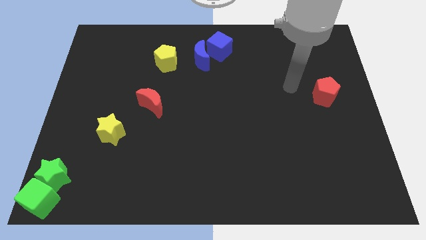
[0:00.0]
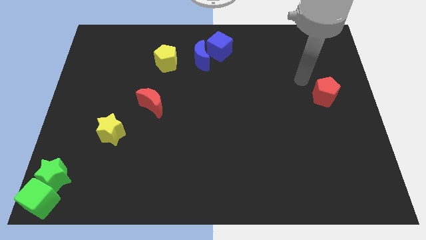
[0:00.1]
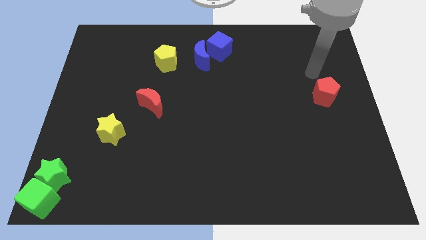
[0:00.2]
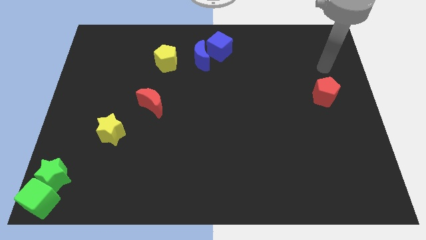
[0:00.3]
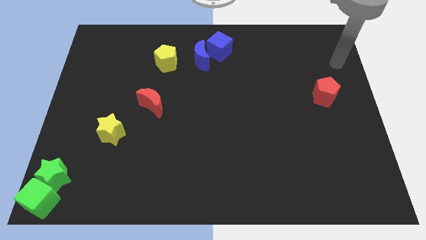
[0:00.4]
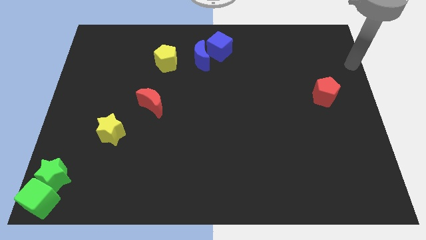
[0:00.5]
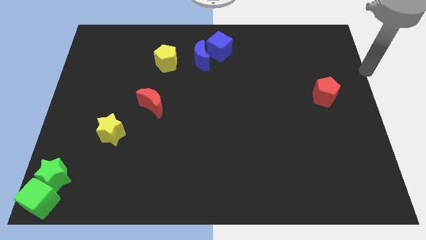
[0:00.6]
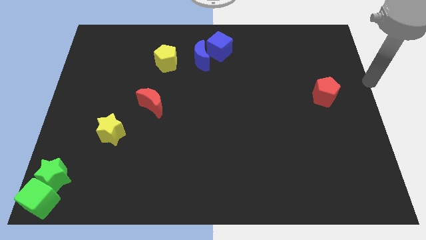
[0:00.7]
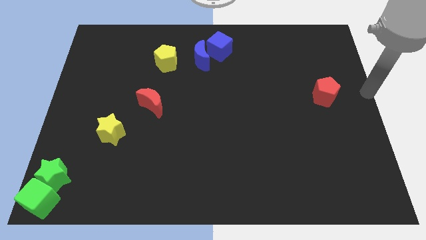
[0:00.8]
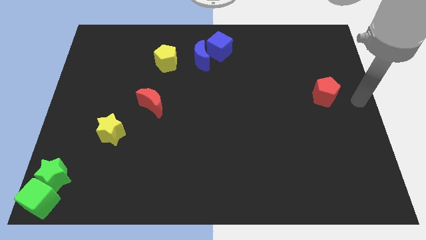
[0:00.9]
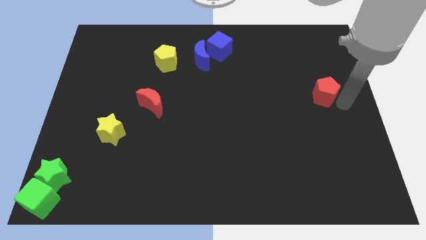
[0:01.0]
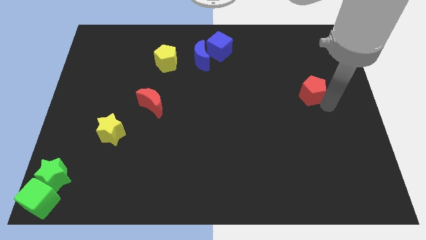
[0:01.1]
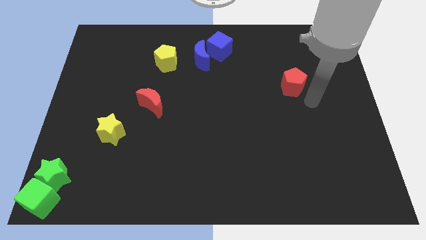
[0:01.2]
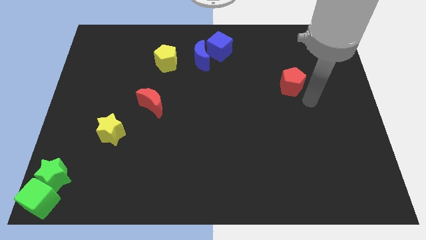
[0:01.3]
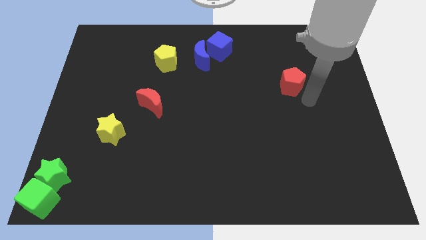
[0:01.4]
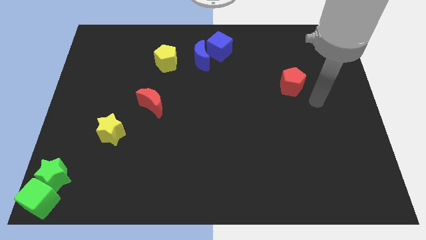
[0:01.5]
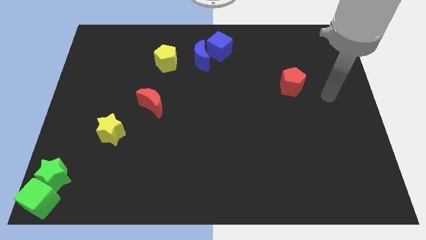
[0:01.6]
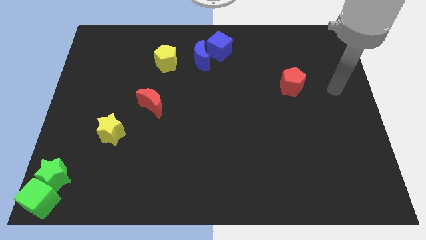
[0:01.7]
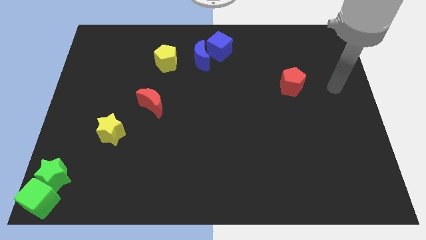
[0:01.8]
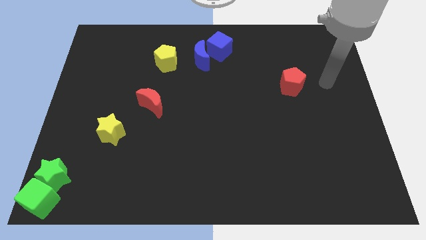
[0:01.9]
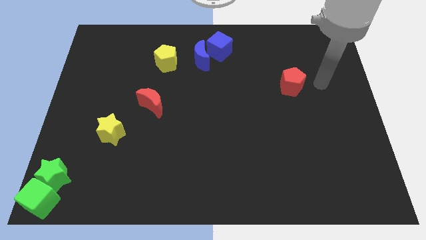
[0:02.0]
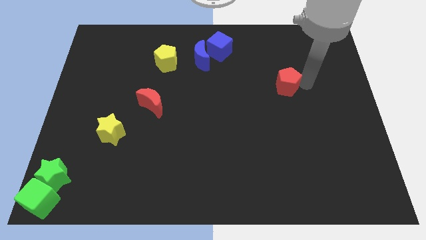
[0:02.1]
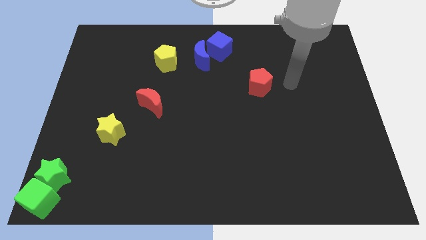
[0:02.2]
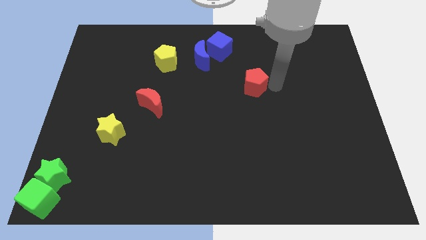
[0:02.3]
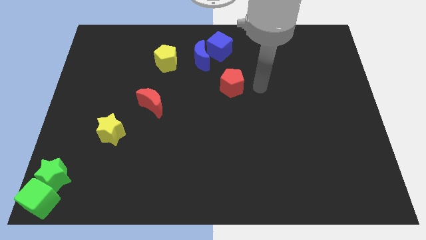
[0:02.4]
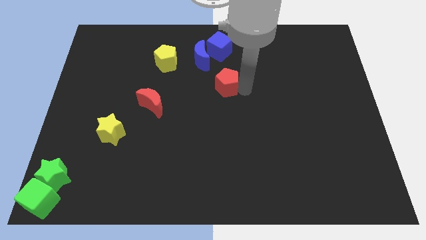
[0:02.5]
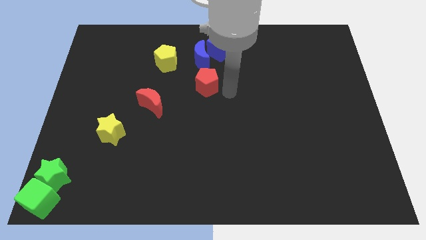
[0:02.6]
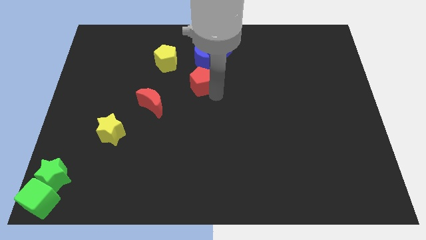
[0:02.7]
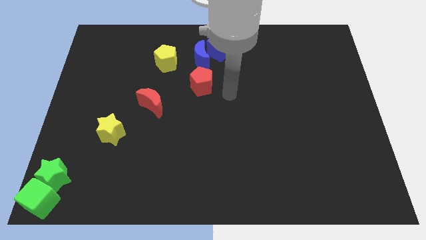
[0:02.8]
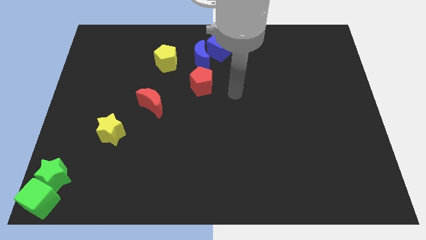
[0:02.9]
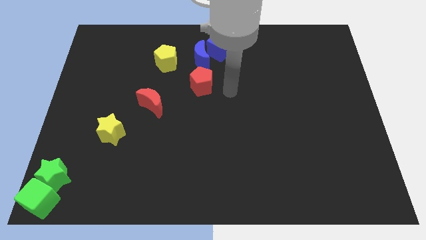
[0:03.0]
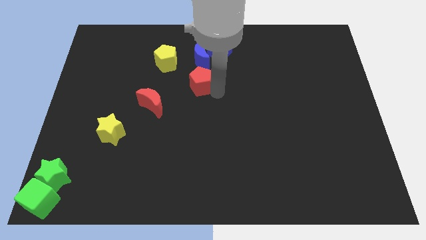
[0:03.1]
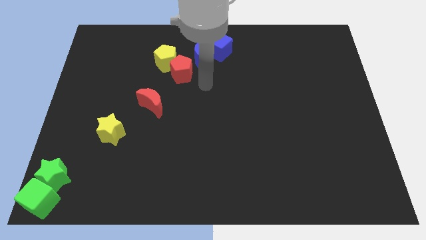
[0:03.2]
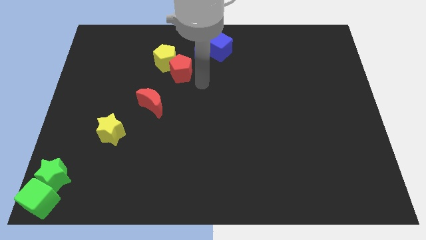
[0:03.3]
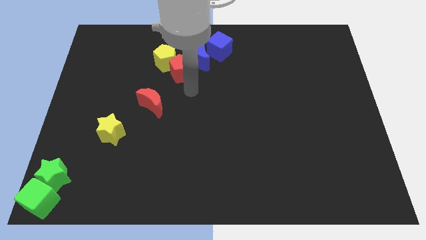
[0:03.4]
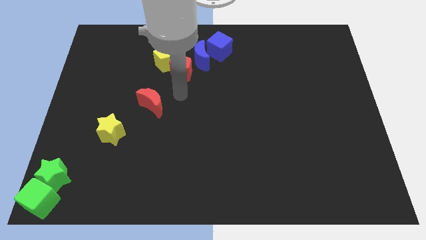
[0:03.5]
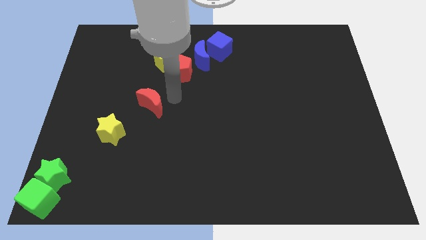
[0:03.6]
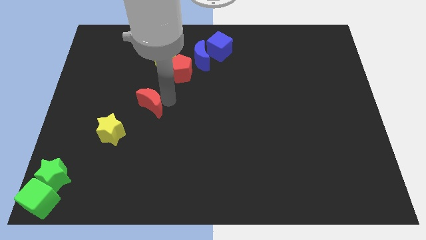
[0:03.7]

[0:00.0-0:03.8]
push the red pentagon to the bottom right of the yellow pentagon

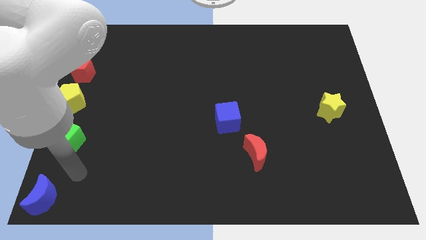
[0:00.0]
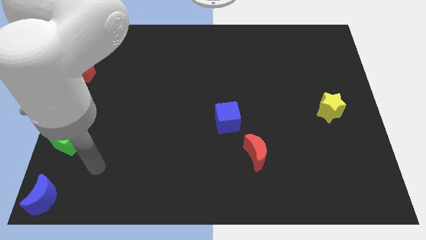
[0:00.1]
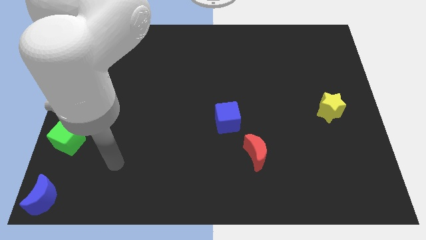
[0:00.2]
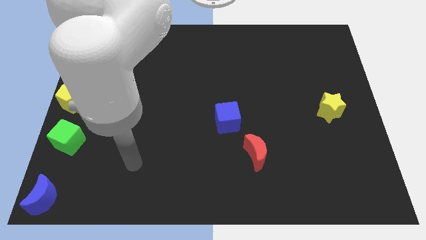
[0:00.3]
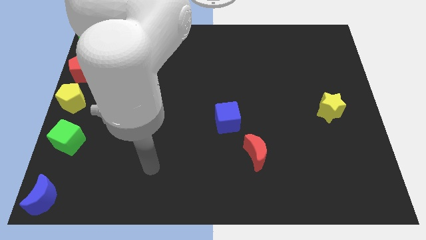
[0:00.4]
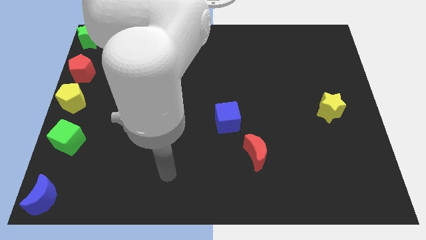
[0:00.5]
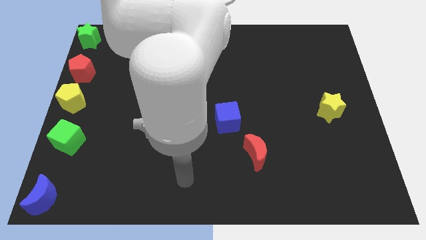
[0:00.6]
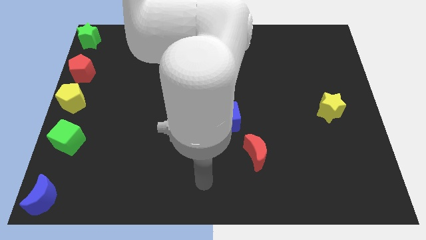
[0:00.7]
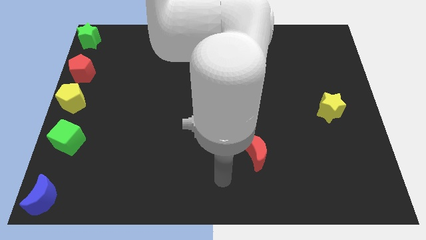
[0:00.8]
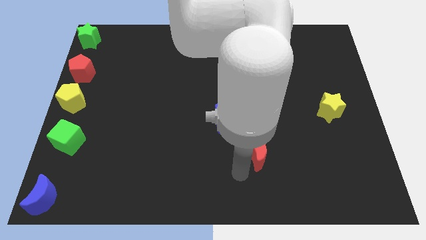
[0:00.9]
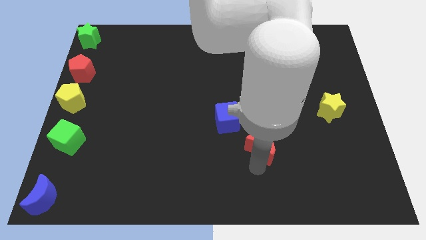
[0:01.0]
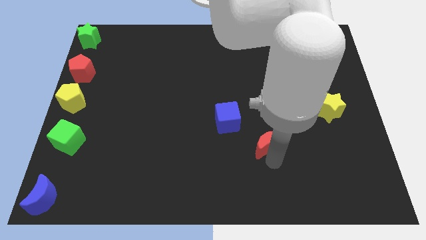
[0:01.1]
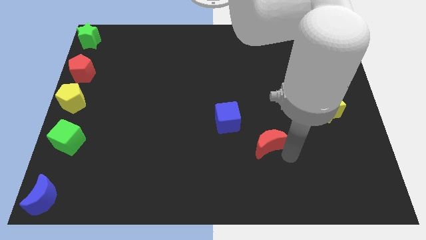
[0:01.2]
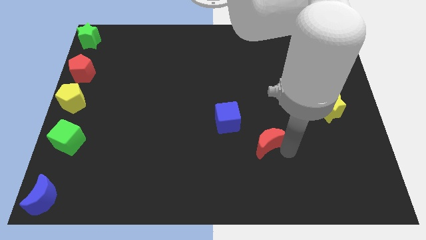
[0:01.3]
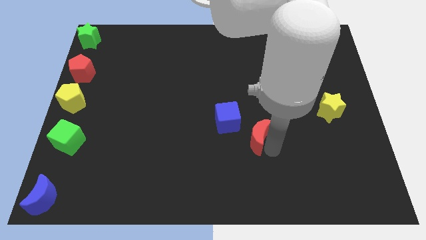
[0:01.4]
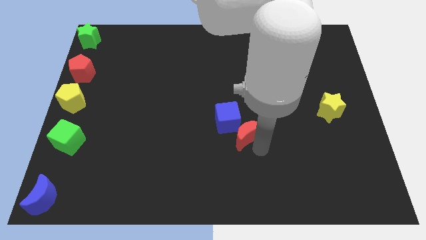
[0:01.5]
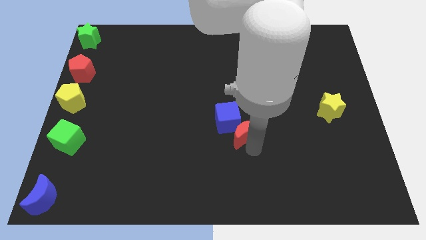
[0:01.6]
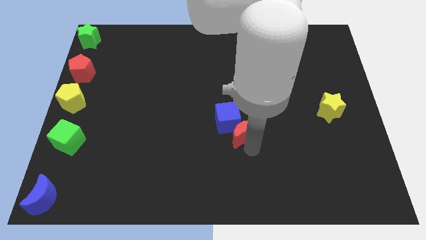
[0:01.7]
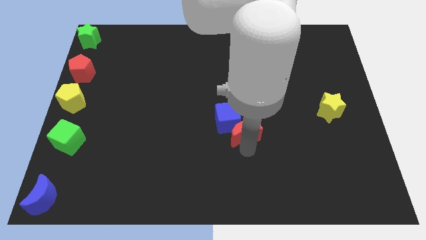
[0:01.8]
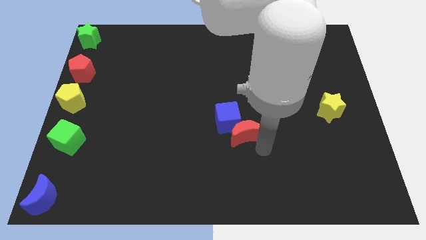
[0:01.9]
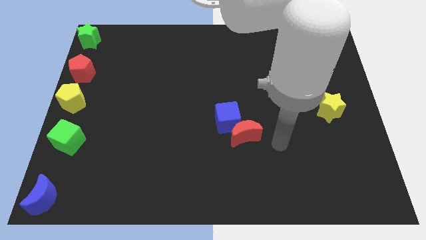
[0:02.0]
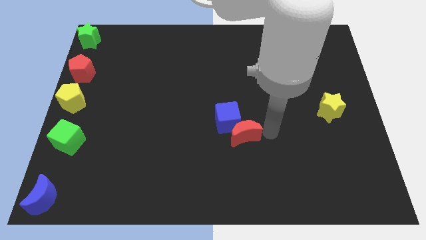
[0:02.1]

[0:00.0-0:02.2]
place the red crescent at the bottom right side of blue cube

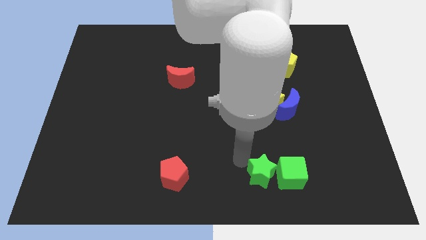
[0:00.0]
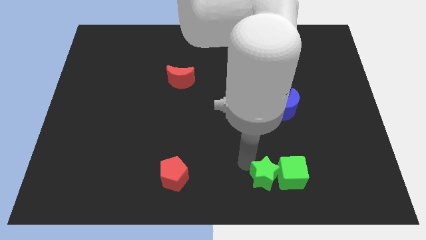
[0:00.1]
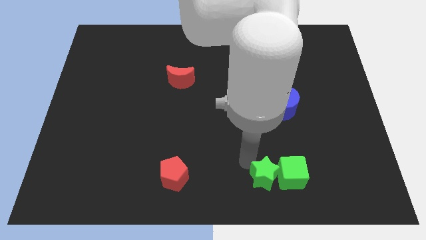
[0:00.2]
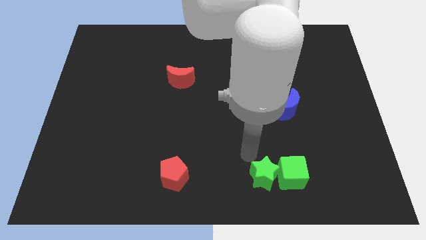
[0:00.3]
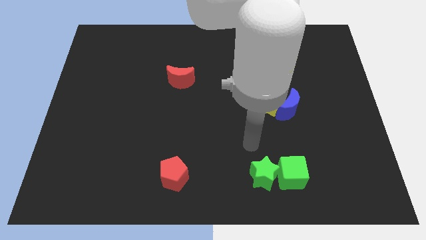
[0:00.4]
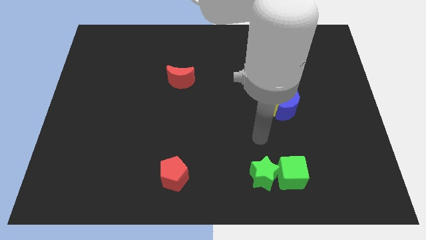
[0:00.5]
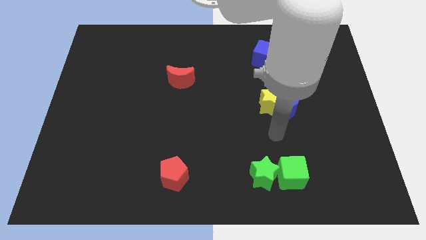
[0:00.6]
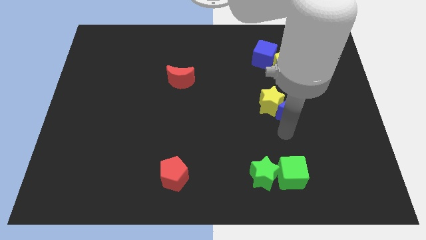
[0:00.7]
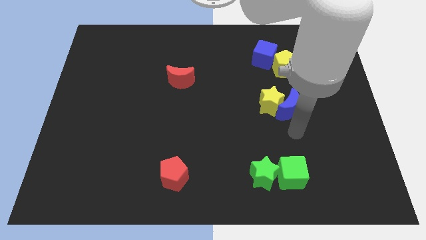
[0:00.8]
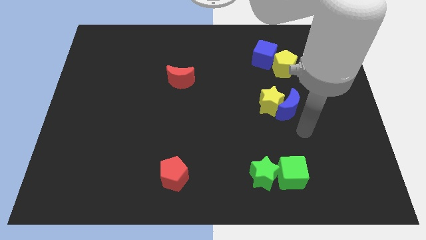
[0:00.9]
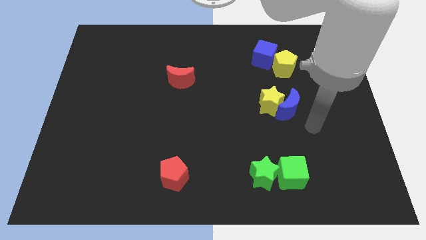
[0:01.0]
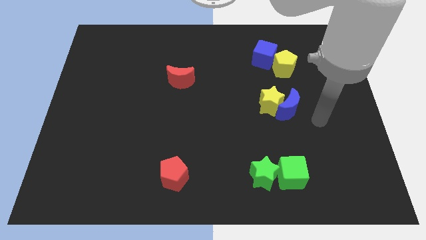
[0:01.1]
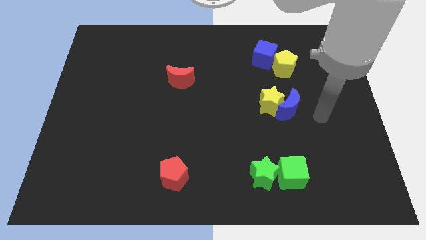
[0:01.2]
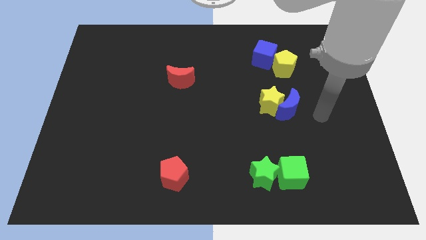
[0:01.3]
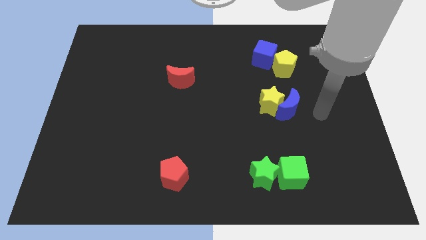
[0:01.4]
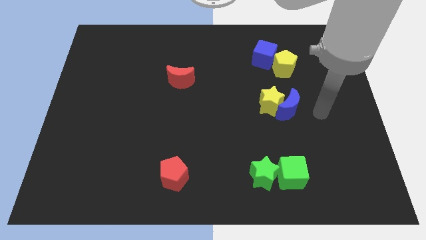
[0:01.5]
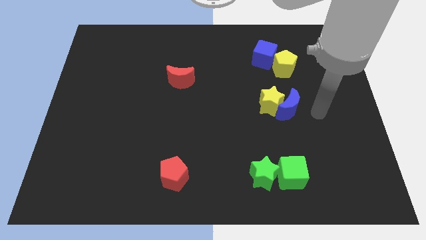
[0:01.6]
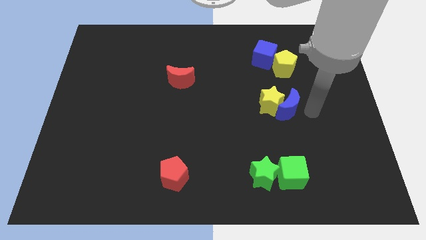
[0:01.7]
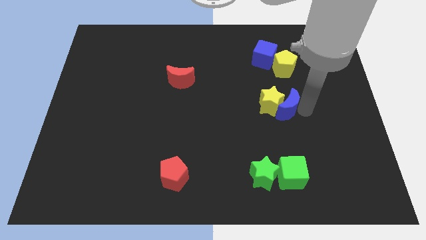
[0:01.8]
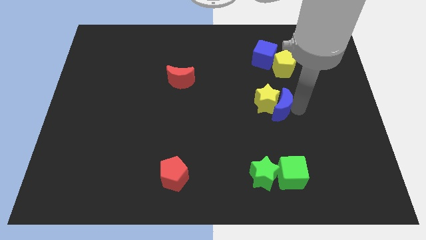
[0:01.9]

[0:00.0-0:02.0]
move your arm towards the blue crescent

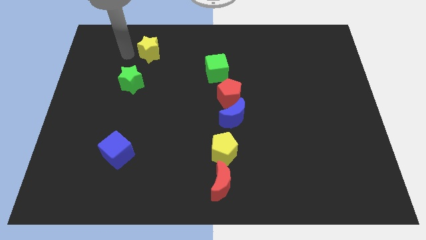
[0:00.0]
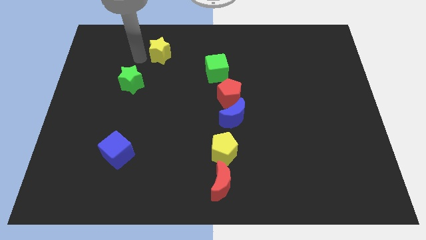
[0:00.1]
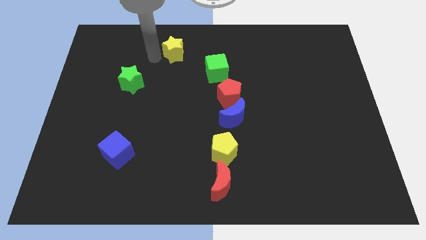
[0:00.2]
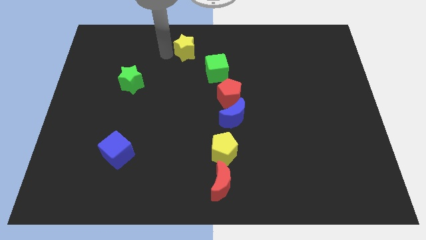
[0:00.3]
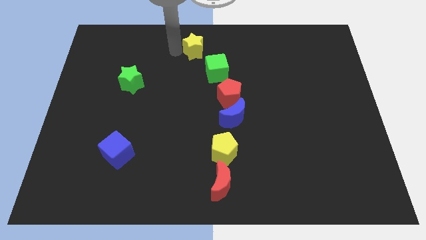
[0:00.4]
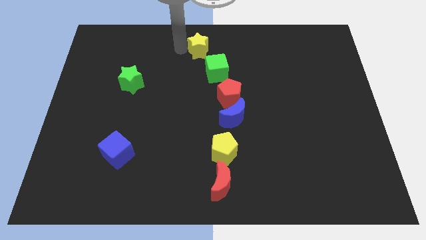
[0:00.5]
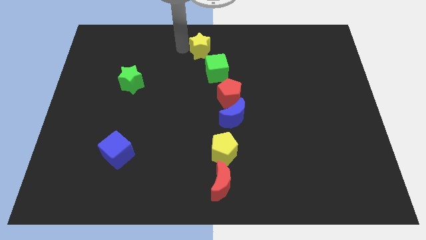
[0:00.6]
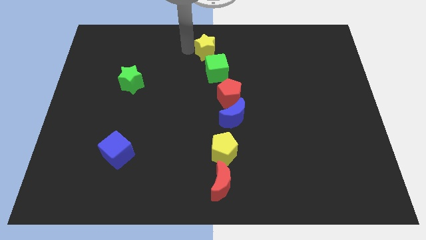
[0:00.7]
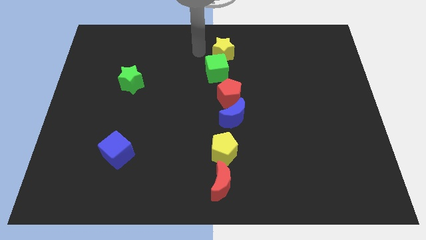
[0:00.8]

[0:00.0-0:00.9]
push the yellow star to the top center
